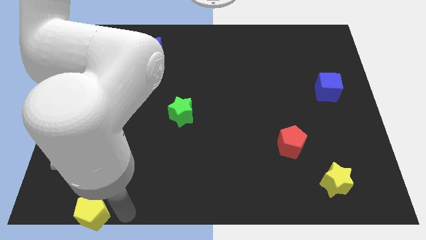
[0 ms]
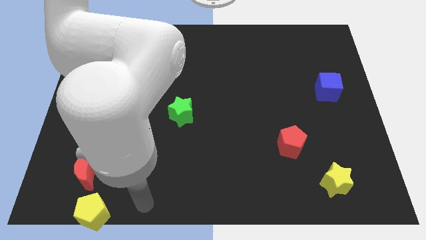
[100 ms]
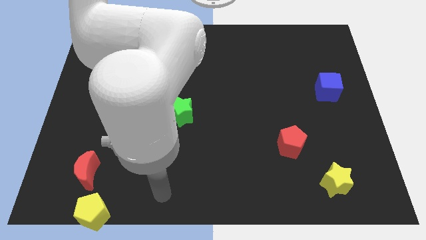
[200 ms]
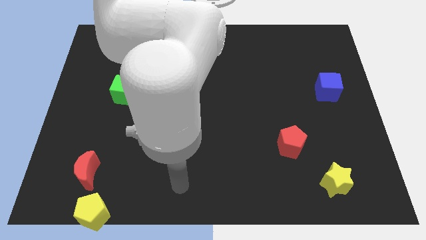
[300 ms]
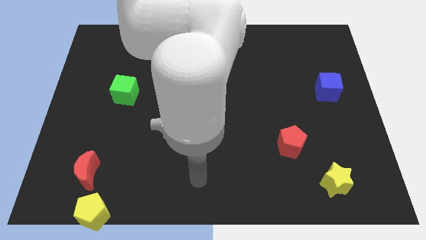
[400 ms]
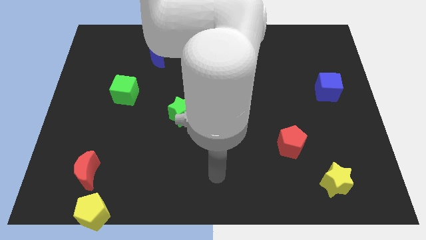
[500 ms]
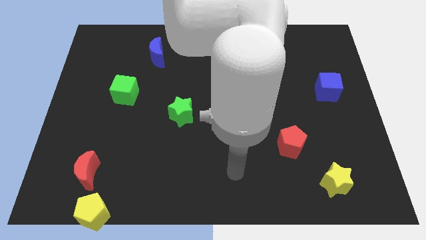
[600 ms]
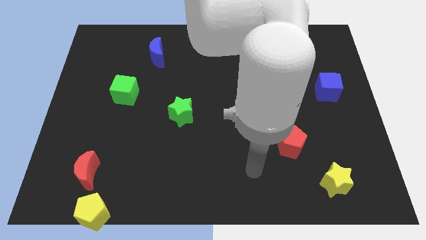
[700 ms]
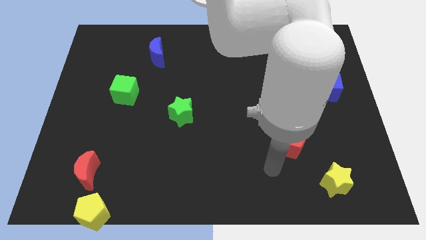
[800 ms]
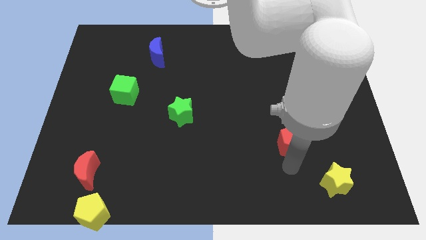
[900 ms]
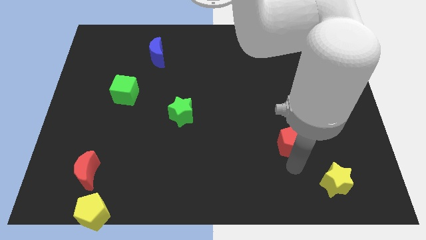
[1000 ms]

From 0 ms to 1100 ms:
move your arm away from yellow pentagon

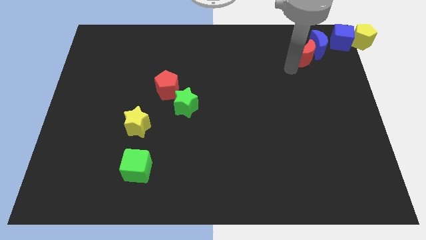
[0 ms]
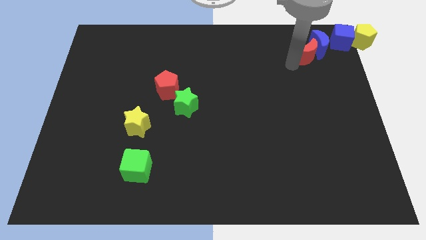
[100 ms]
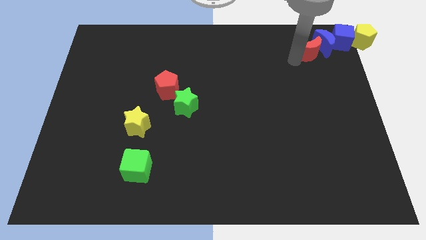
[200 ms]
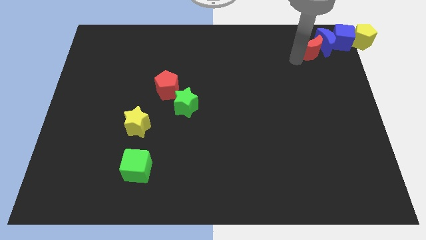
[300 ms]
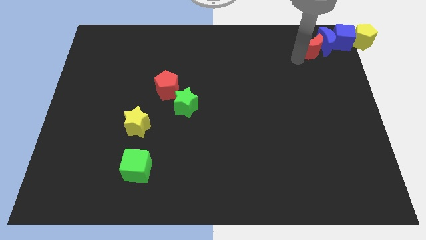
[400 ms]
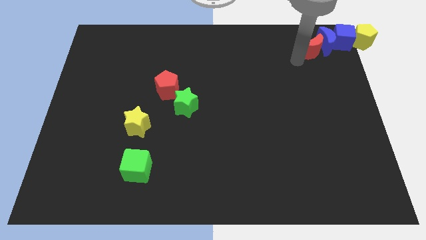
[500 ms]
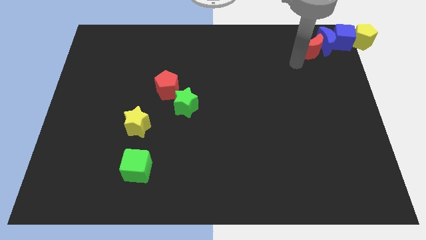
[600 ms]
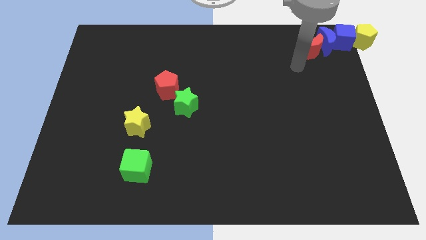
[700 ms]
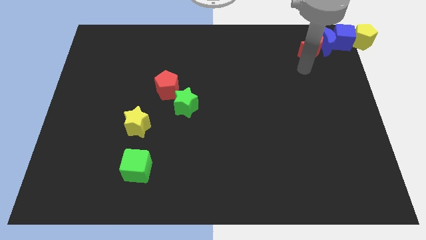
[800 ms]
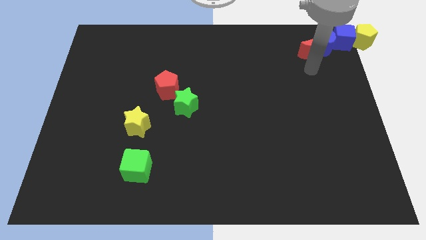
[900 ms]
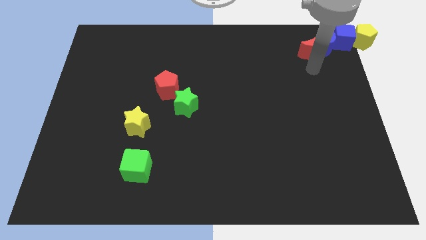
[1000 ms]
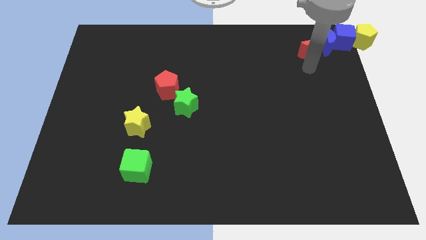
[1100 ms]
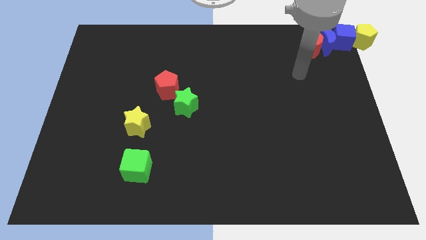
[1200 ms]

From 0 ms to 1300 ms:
push the red crescent and the blue crescent to the right

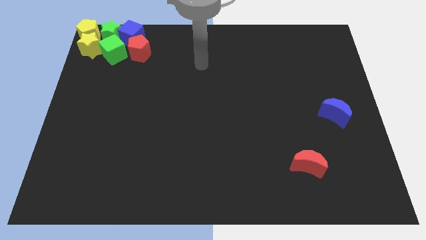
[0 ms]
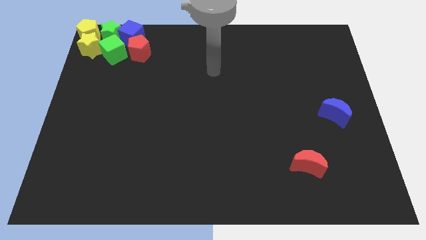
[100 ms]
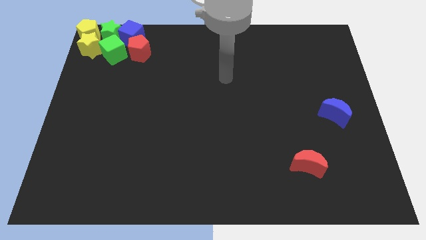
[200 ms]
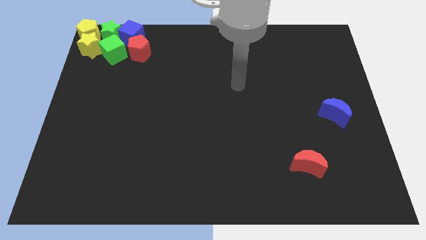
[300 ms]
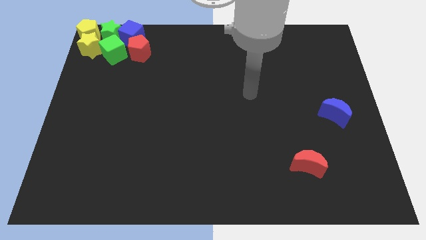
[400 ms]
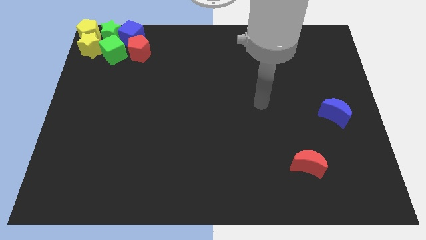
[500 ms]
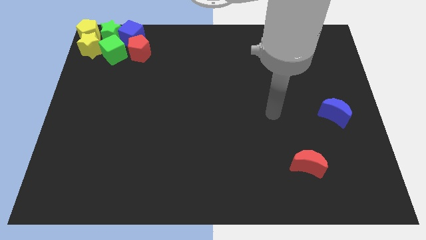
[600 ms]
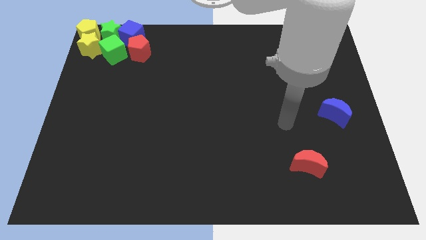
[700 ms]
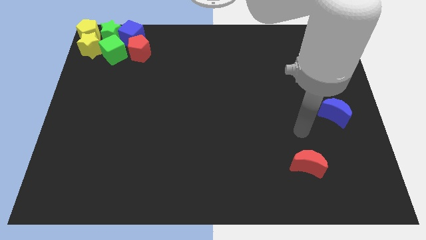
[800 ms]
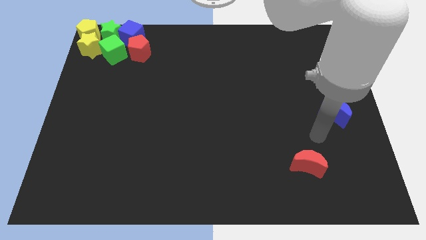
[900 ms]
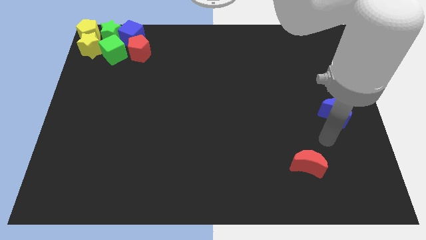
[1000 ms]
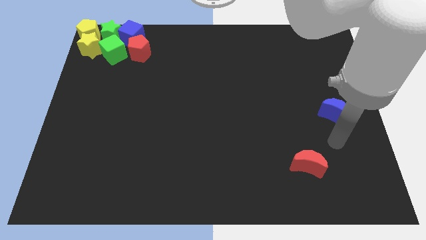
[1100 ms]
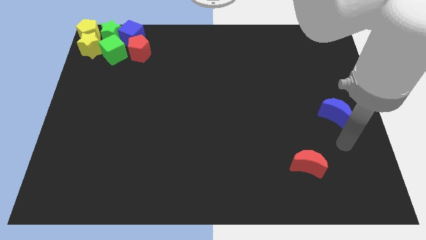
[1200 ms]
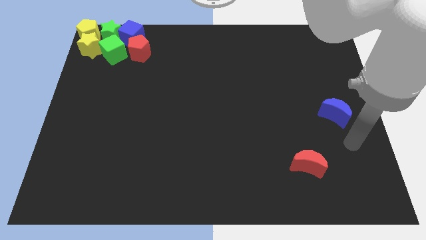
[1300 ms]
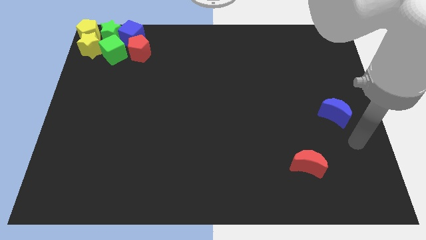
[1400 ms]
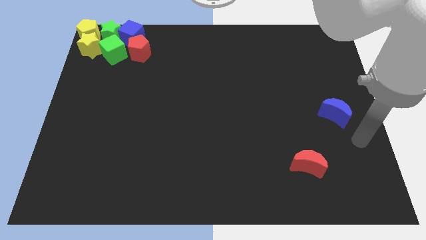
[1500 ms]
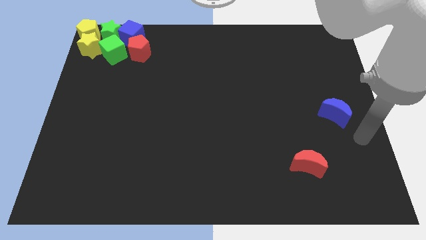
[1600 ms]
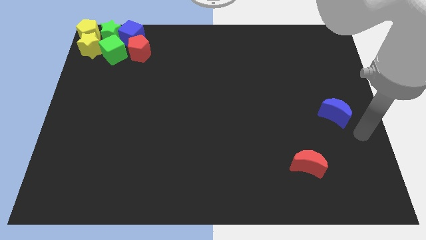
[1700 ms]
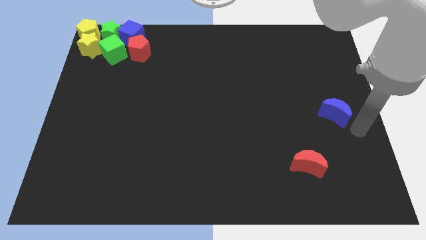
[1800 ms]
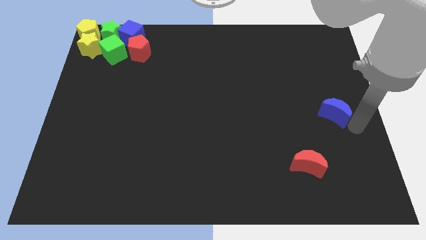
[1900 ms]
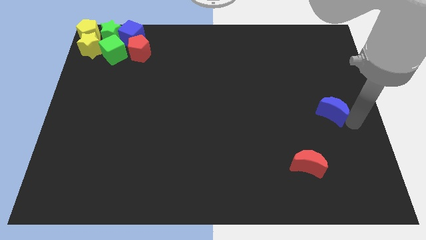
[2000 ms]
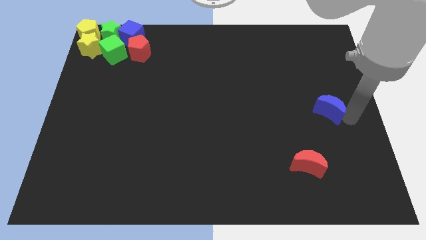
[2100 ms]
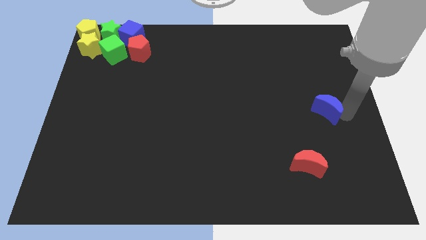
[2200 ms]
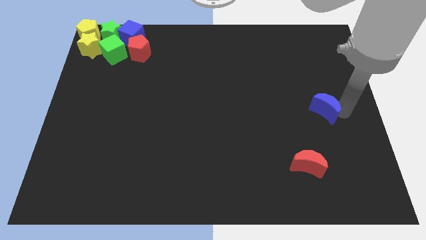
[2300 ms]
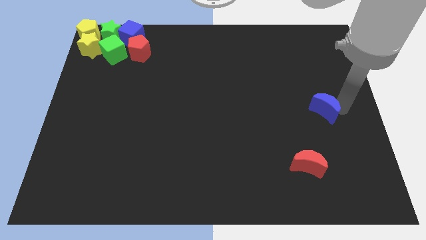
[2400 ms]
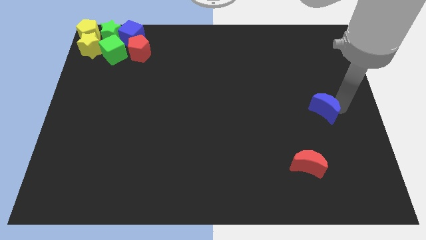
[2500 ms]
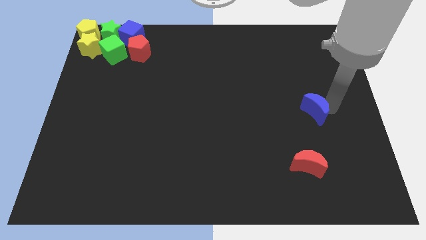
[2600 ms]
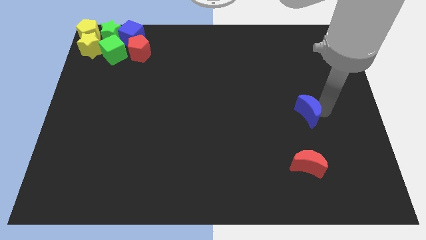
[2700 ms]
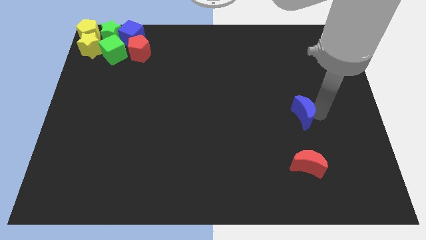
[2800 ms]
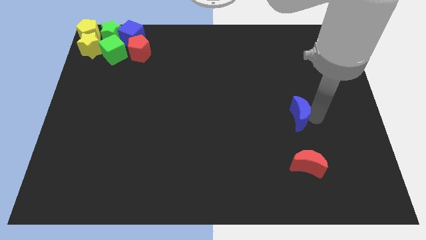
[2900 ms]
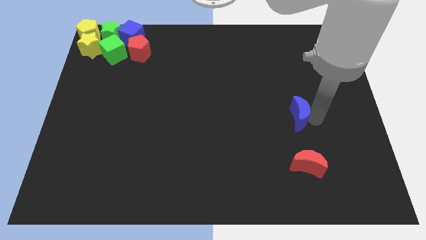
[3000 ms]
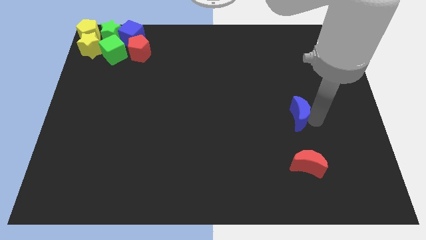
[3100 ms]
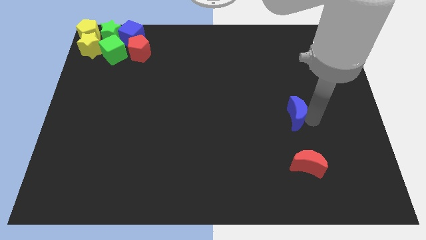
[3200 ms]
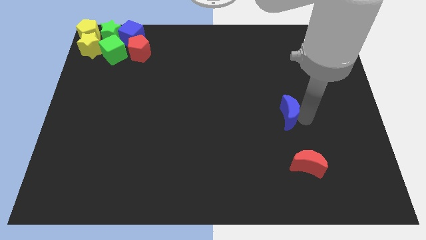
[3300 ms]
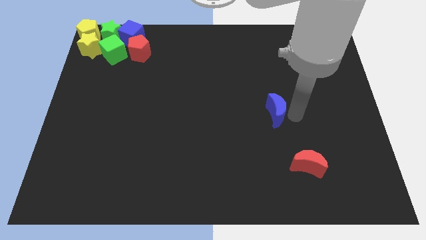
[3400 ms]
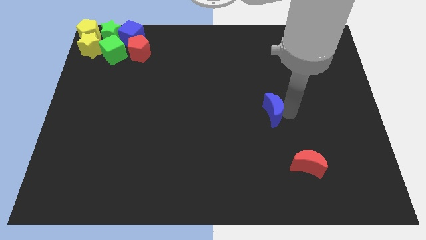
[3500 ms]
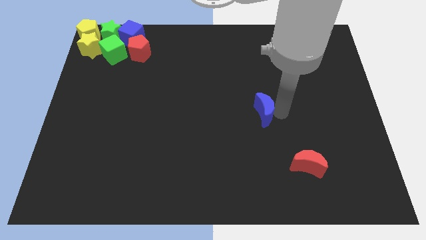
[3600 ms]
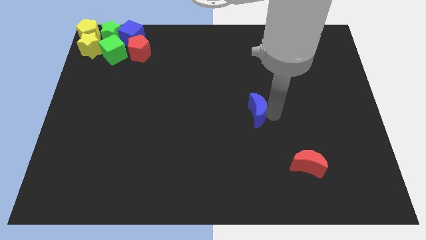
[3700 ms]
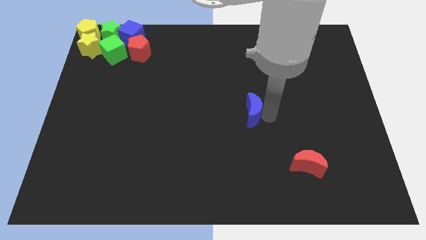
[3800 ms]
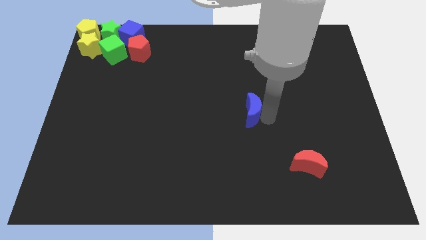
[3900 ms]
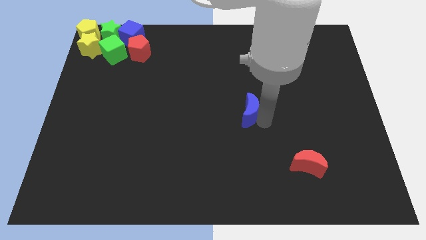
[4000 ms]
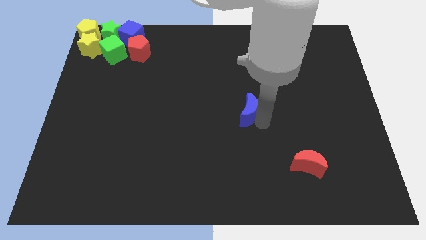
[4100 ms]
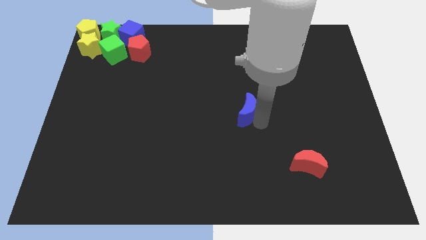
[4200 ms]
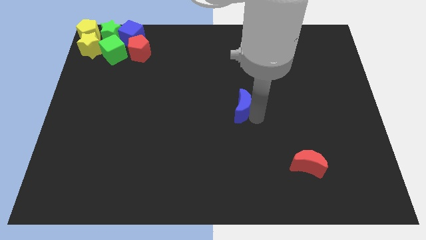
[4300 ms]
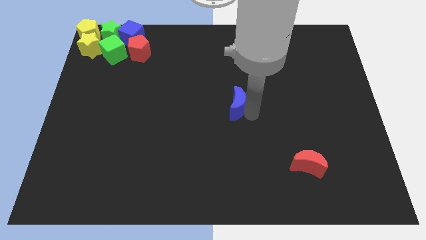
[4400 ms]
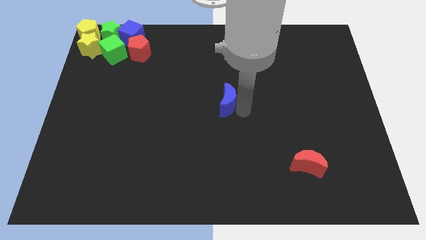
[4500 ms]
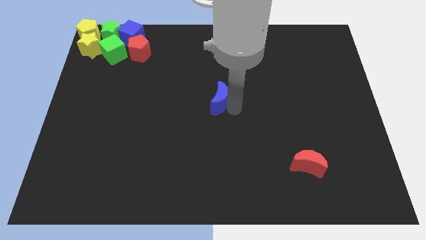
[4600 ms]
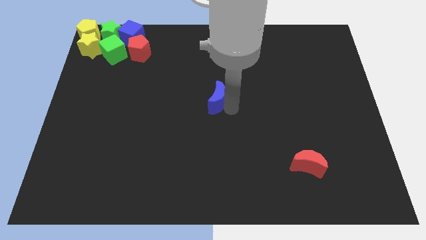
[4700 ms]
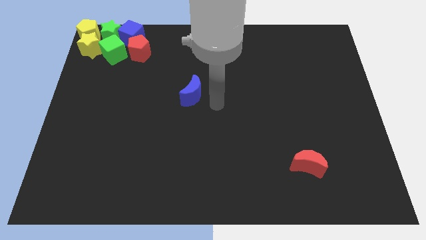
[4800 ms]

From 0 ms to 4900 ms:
push the blue crescent towards the center of the board

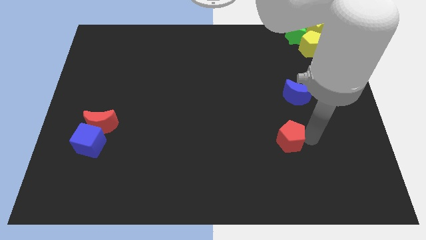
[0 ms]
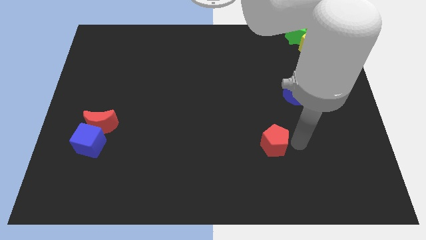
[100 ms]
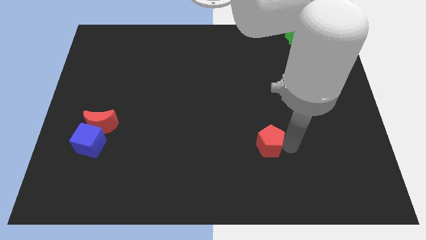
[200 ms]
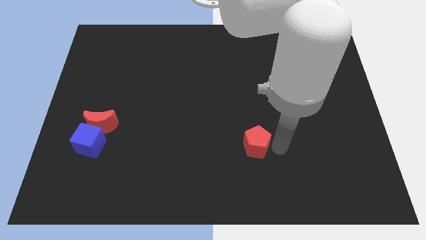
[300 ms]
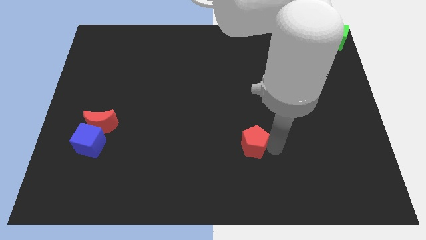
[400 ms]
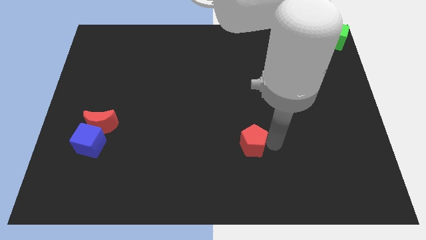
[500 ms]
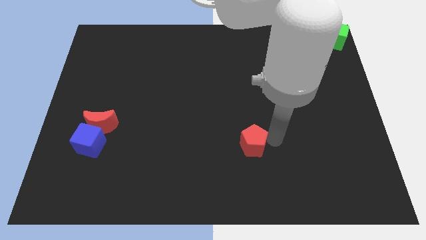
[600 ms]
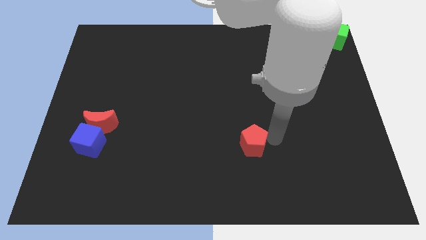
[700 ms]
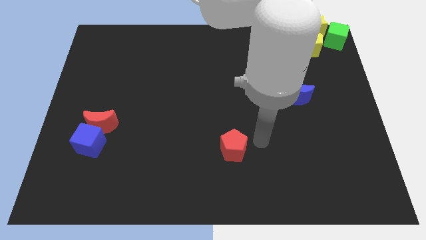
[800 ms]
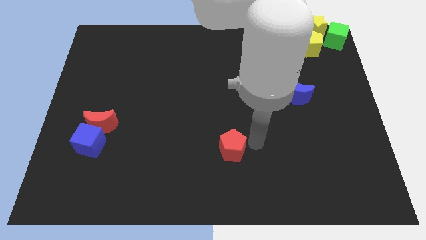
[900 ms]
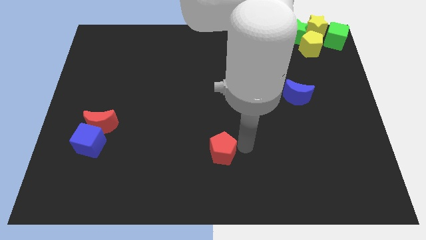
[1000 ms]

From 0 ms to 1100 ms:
move the red pentagon to the bottom center

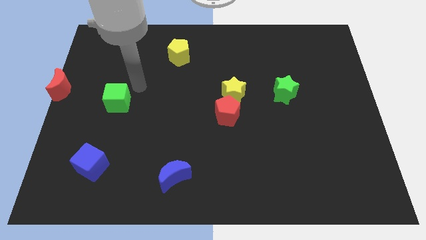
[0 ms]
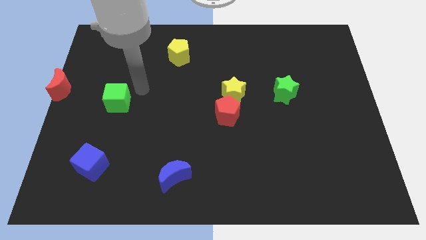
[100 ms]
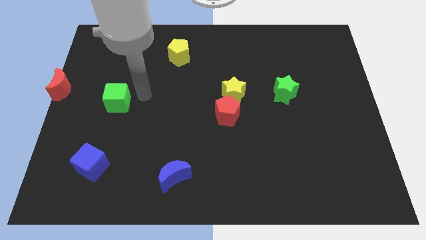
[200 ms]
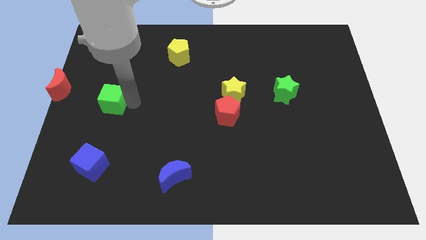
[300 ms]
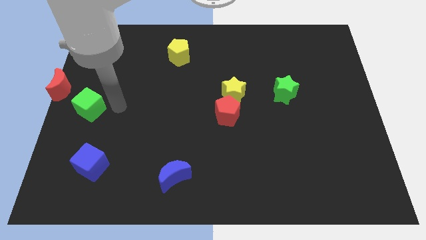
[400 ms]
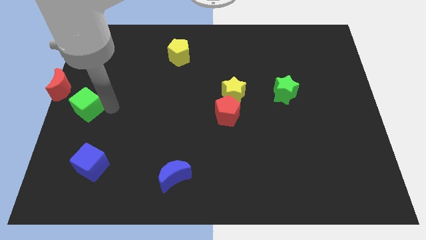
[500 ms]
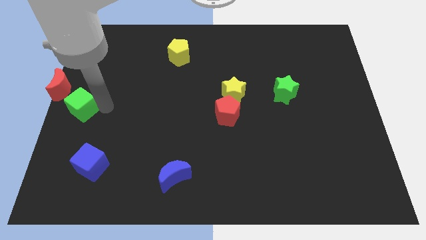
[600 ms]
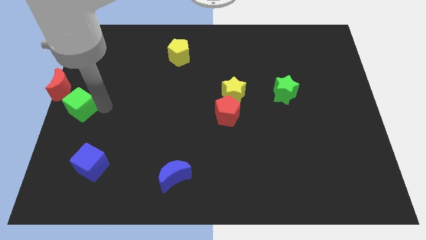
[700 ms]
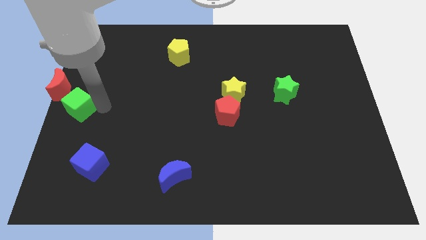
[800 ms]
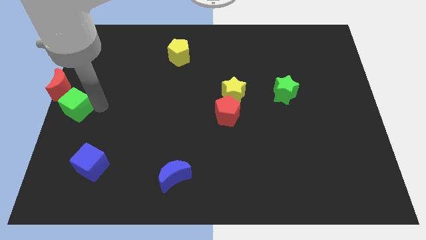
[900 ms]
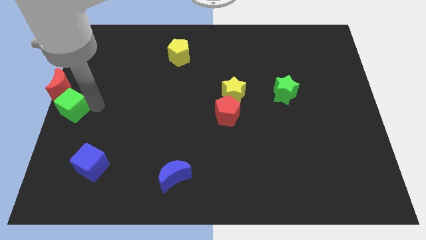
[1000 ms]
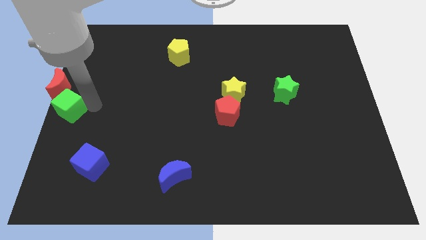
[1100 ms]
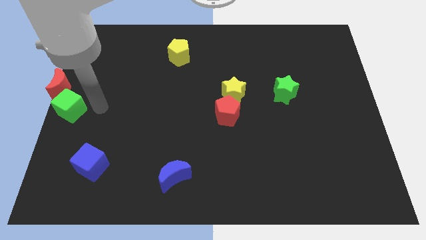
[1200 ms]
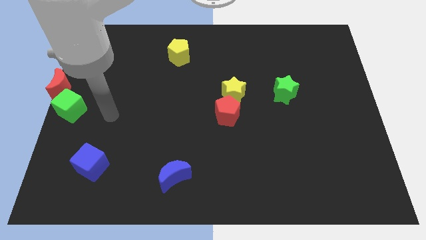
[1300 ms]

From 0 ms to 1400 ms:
put the green cube close to the red crescent
